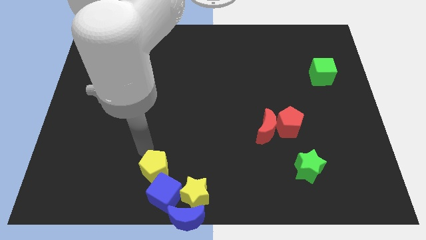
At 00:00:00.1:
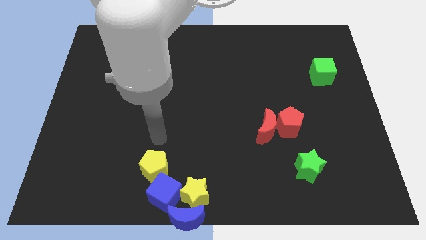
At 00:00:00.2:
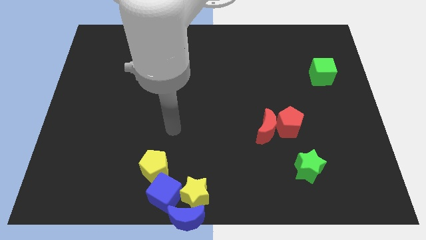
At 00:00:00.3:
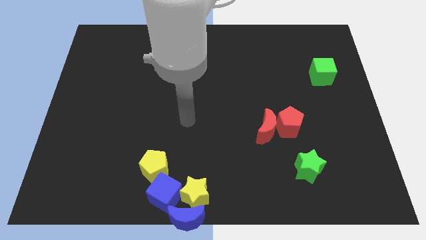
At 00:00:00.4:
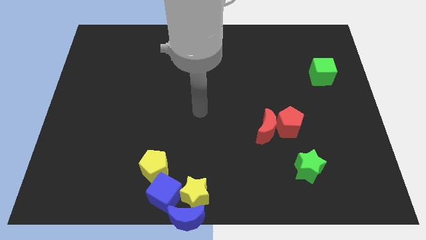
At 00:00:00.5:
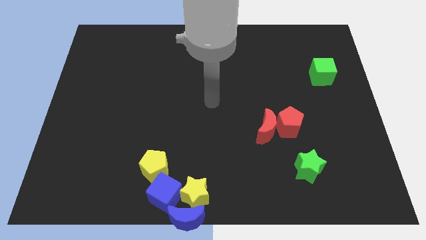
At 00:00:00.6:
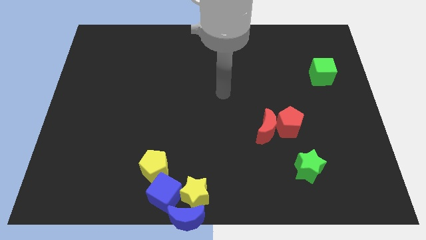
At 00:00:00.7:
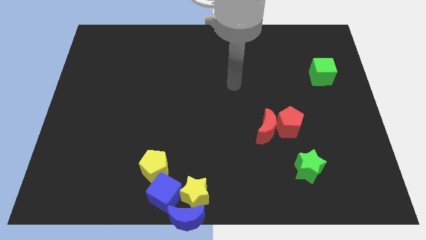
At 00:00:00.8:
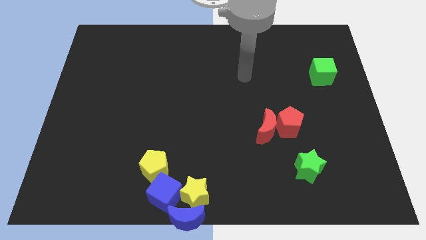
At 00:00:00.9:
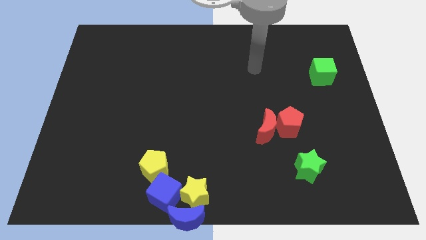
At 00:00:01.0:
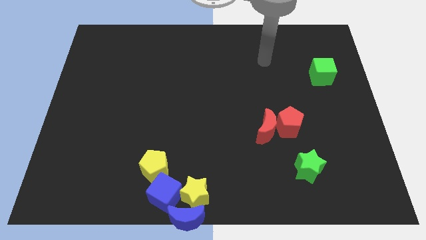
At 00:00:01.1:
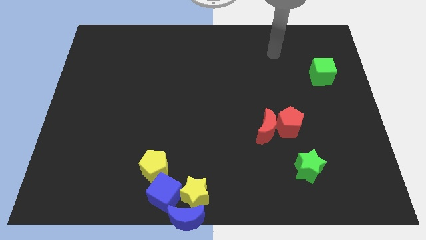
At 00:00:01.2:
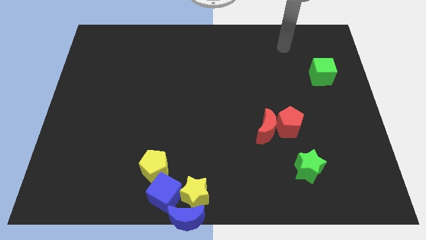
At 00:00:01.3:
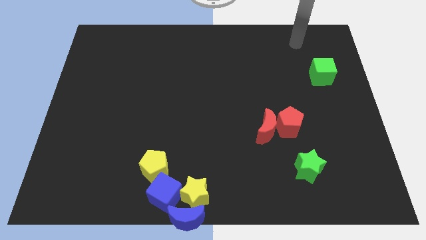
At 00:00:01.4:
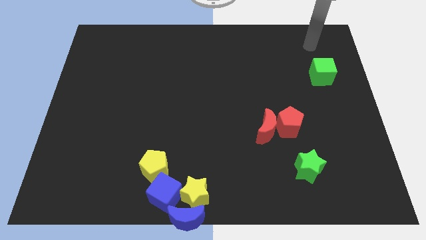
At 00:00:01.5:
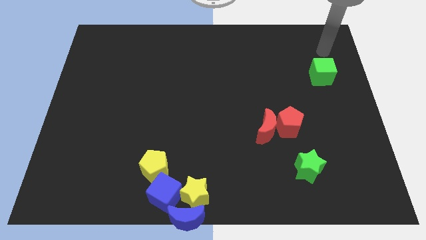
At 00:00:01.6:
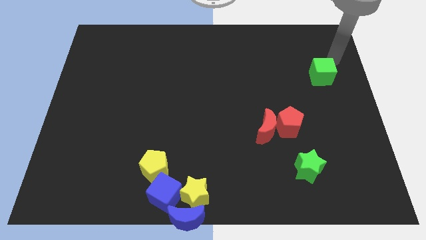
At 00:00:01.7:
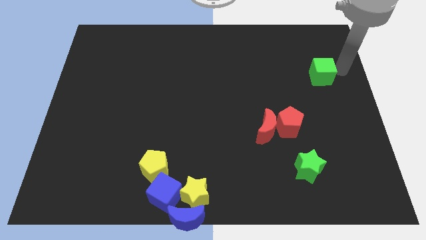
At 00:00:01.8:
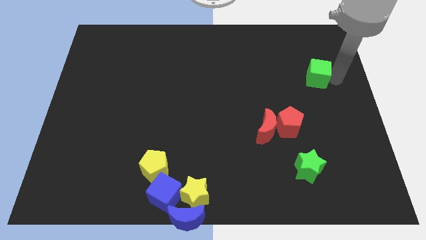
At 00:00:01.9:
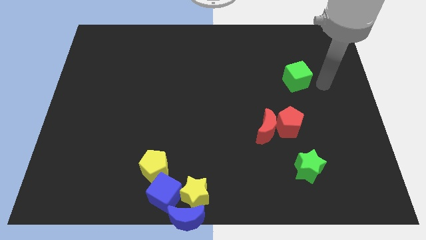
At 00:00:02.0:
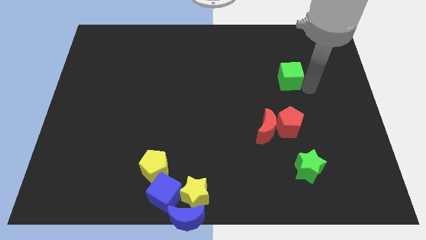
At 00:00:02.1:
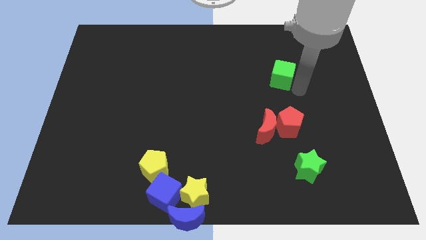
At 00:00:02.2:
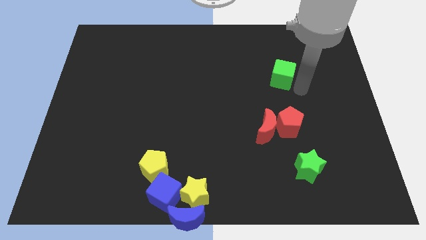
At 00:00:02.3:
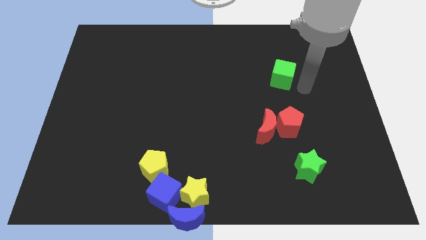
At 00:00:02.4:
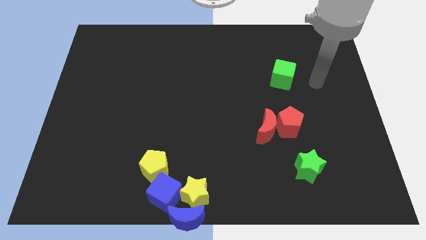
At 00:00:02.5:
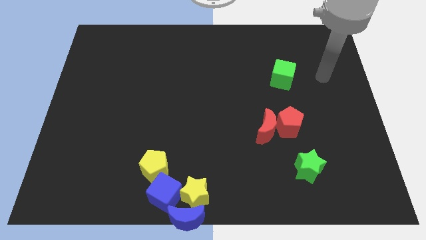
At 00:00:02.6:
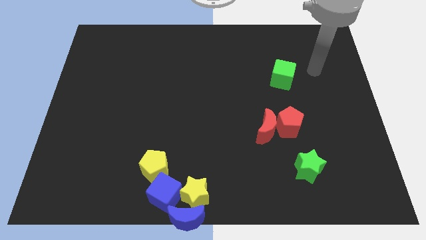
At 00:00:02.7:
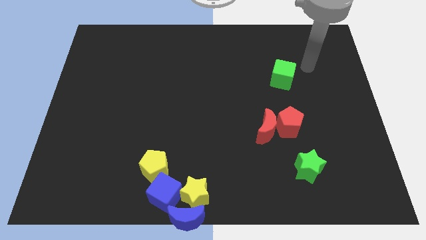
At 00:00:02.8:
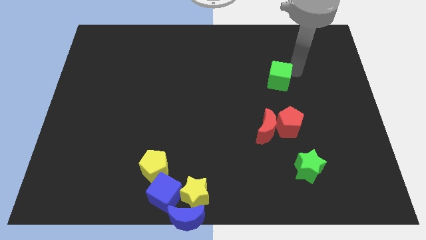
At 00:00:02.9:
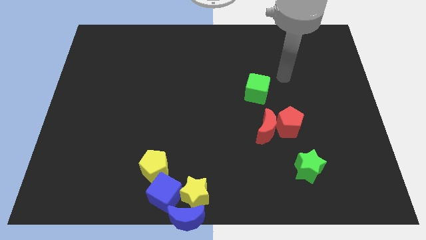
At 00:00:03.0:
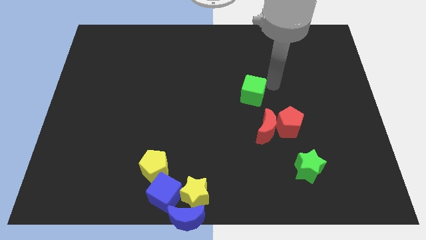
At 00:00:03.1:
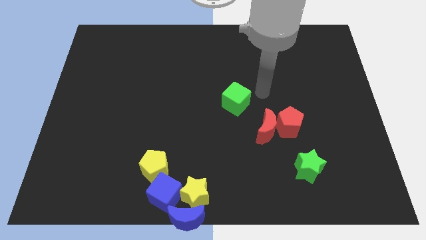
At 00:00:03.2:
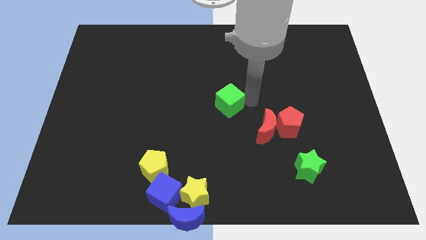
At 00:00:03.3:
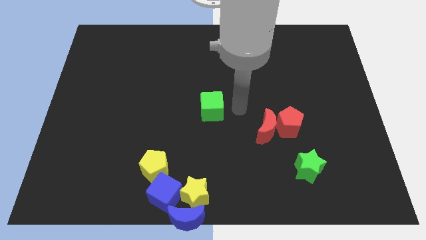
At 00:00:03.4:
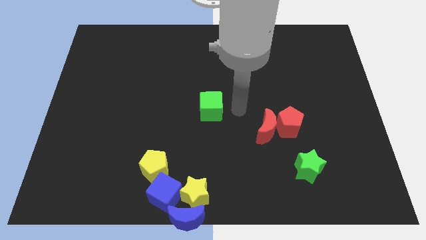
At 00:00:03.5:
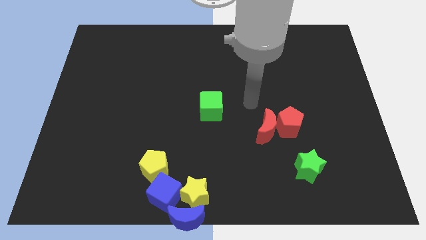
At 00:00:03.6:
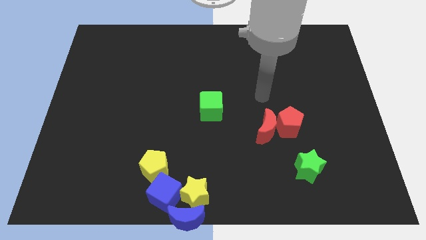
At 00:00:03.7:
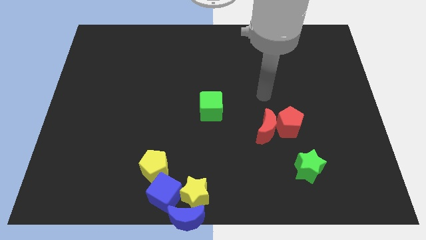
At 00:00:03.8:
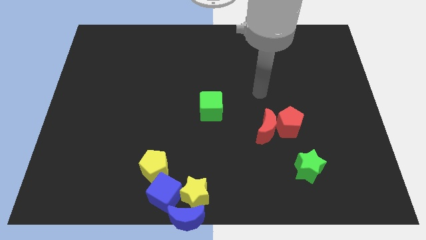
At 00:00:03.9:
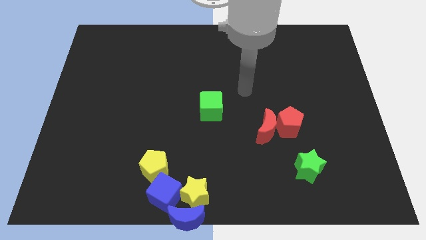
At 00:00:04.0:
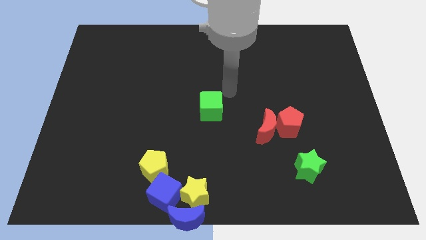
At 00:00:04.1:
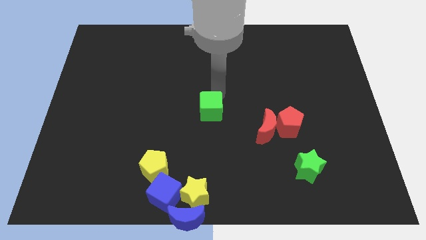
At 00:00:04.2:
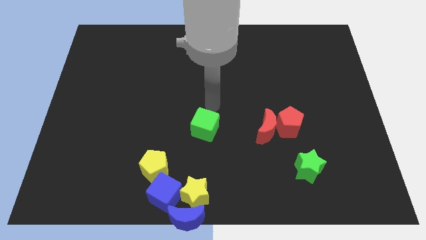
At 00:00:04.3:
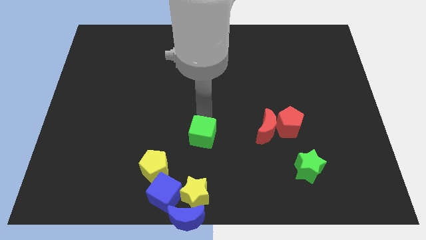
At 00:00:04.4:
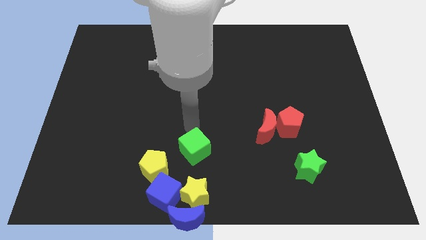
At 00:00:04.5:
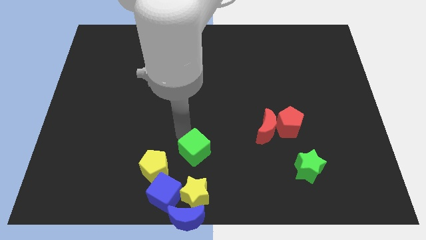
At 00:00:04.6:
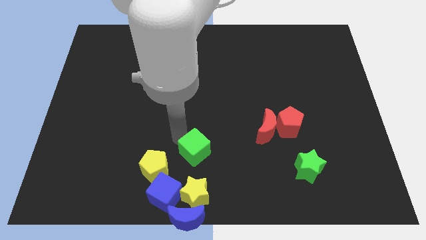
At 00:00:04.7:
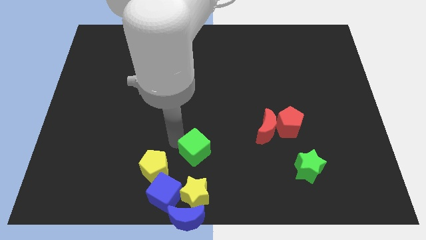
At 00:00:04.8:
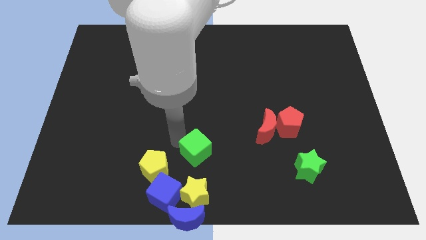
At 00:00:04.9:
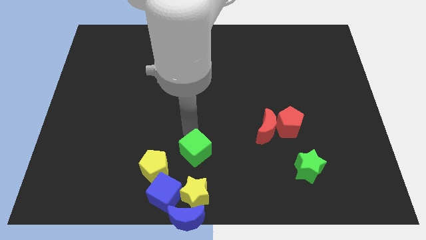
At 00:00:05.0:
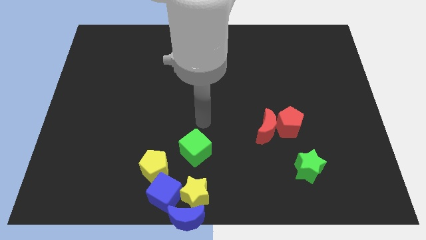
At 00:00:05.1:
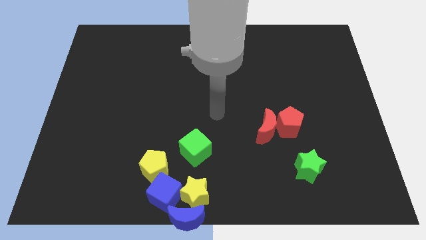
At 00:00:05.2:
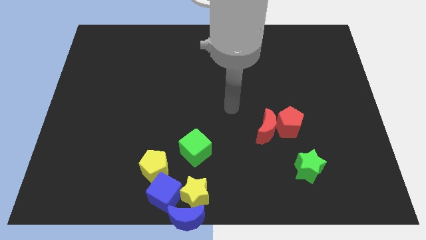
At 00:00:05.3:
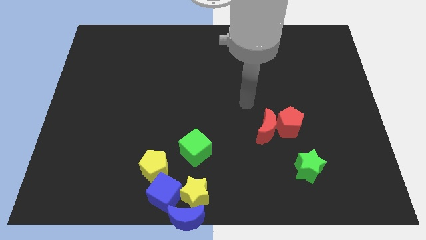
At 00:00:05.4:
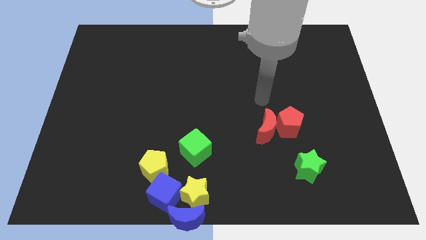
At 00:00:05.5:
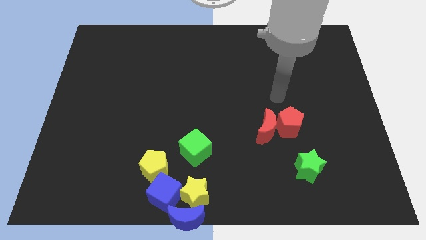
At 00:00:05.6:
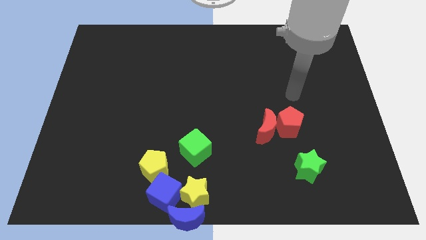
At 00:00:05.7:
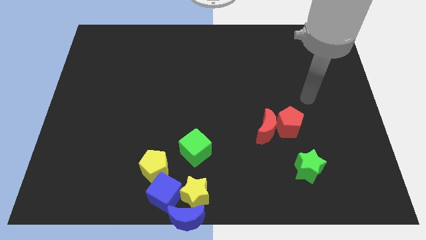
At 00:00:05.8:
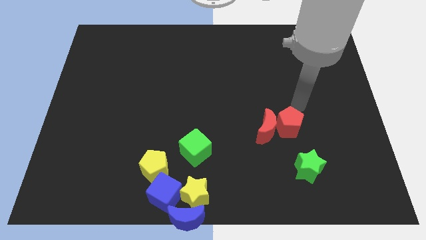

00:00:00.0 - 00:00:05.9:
place the green cube near the yellow pentagon

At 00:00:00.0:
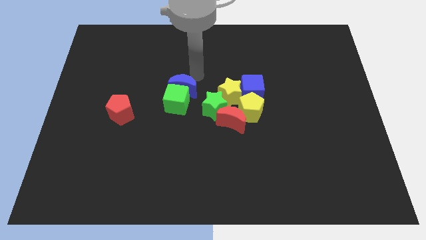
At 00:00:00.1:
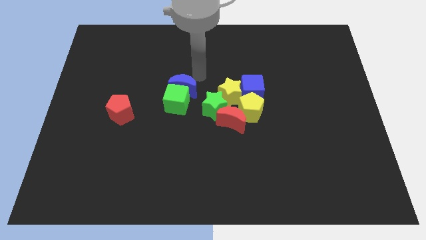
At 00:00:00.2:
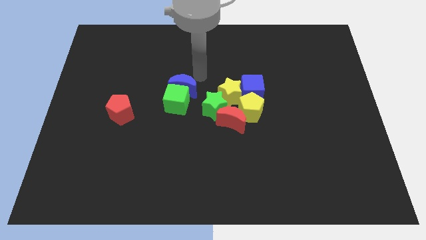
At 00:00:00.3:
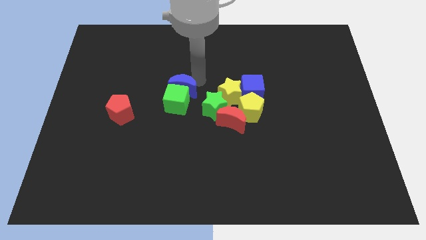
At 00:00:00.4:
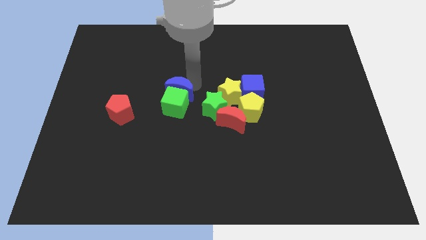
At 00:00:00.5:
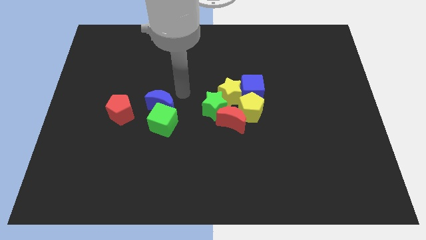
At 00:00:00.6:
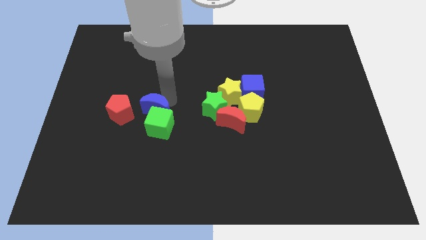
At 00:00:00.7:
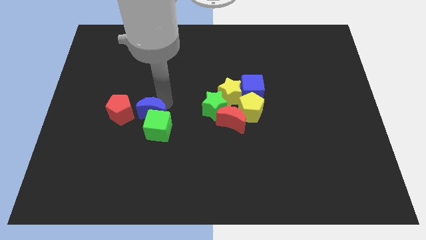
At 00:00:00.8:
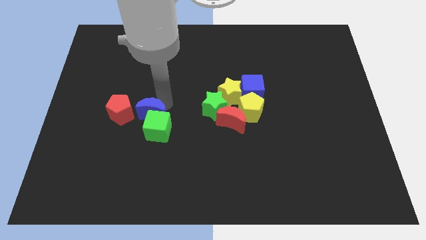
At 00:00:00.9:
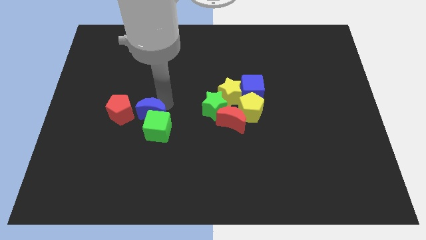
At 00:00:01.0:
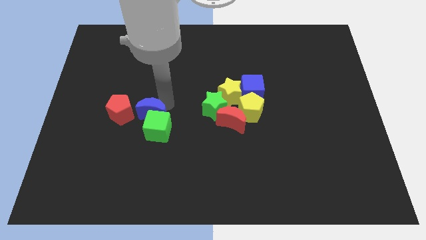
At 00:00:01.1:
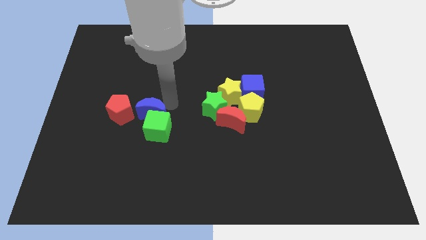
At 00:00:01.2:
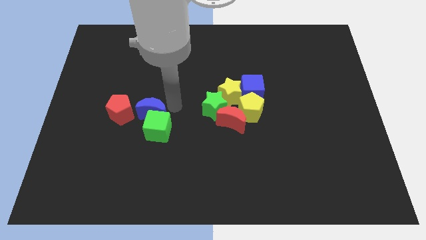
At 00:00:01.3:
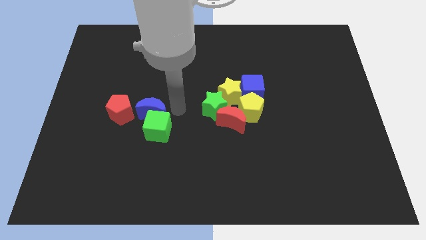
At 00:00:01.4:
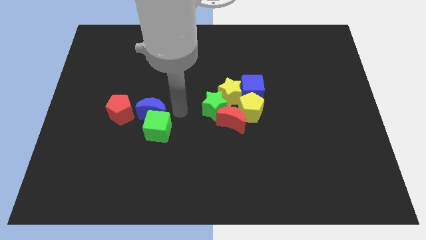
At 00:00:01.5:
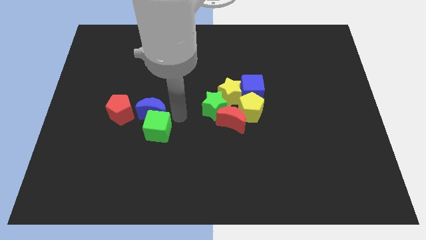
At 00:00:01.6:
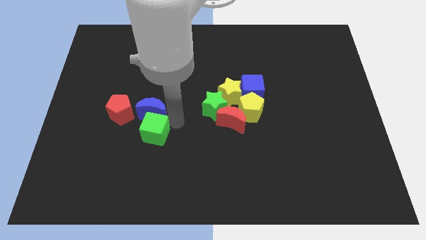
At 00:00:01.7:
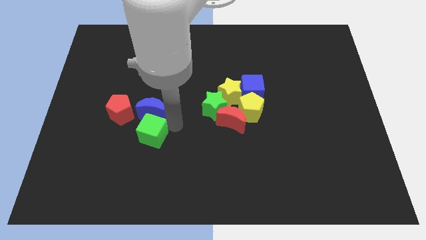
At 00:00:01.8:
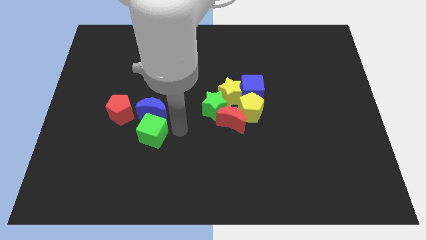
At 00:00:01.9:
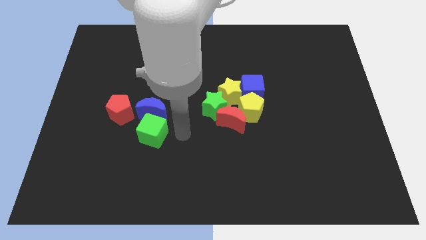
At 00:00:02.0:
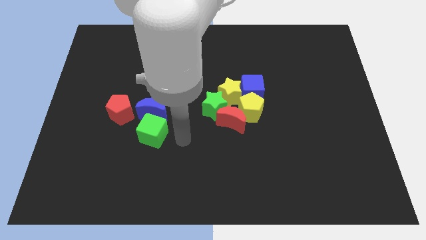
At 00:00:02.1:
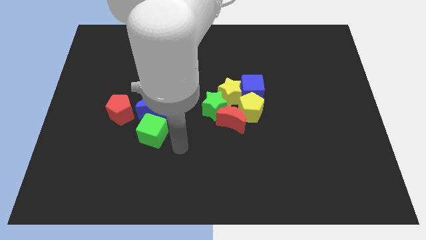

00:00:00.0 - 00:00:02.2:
move the blue moon into green cube

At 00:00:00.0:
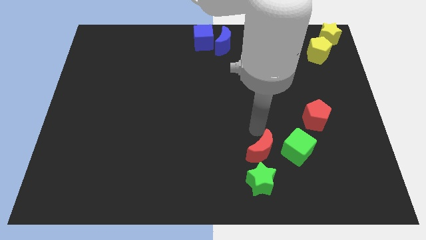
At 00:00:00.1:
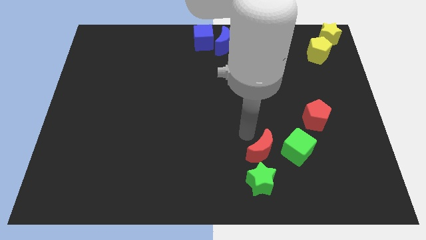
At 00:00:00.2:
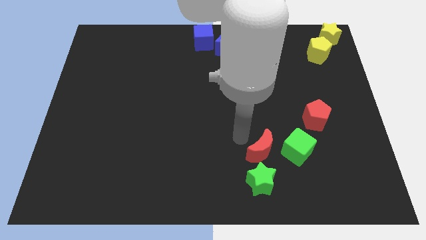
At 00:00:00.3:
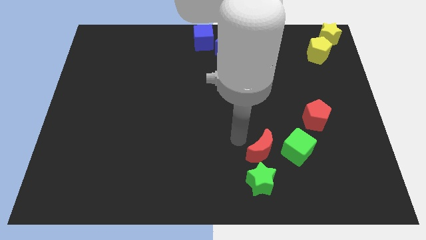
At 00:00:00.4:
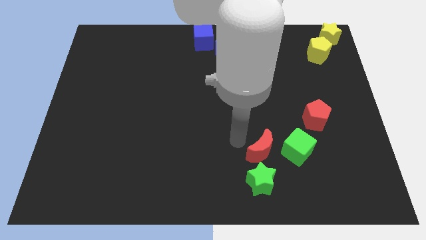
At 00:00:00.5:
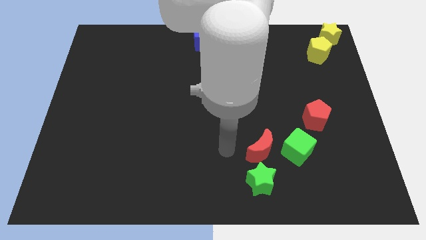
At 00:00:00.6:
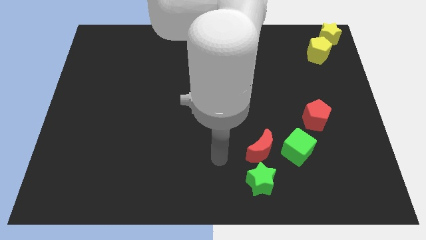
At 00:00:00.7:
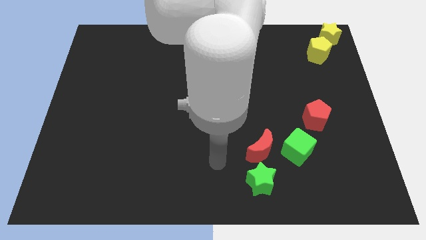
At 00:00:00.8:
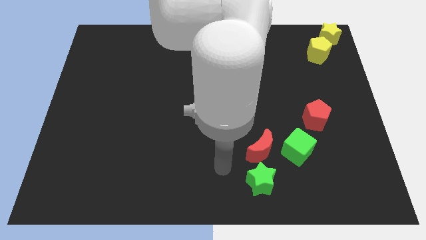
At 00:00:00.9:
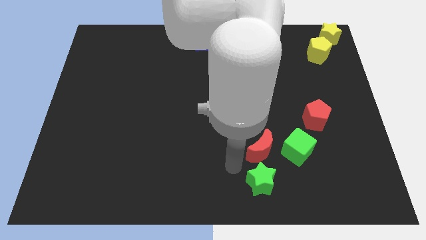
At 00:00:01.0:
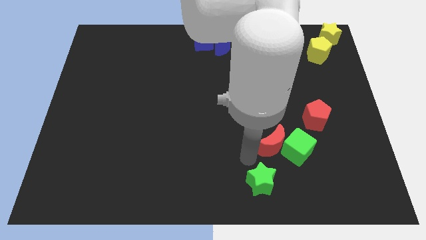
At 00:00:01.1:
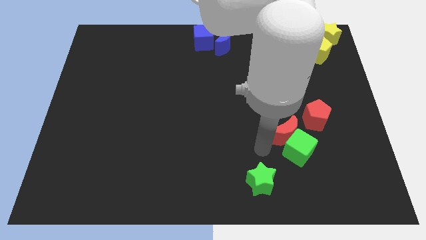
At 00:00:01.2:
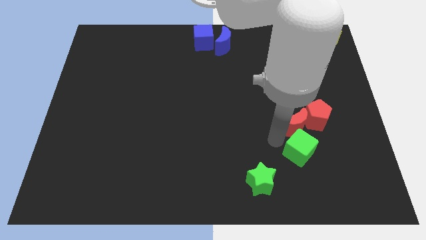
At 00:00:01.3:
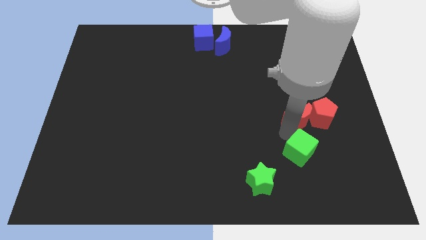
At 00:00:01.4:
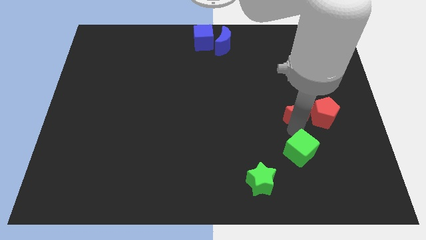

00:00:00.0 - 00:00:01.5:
push the red moon into the red pentagon
